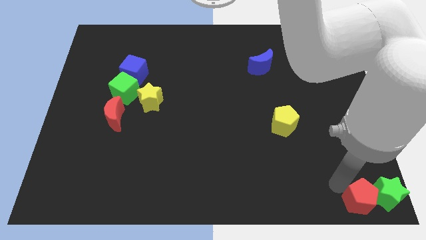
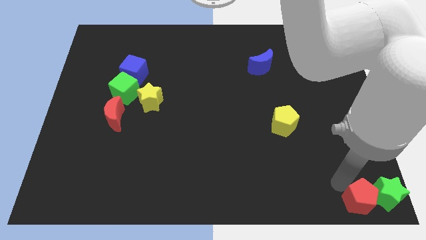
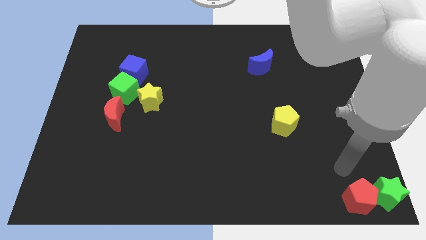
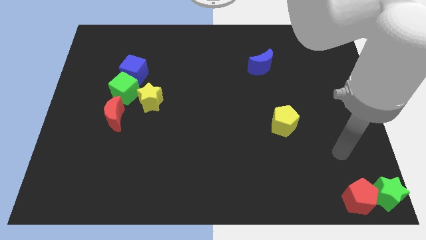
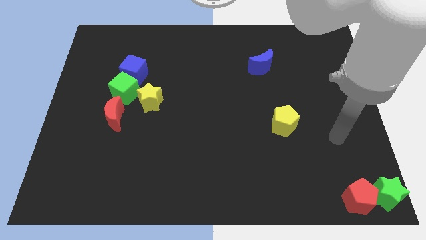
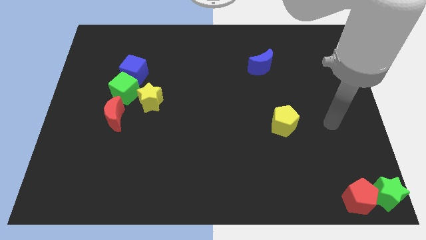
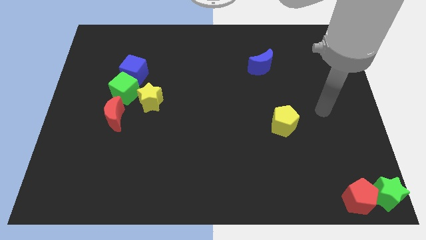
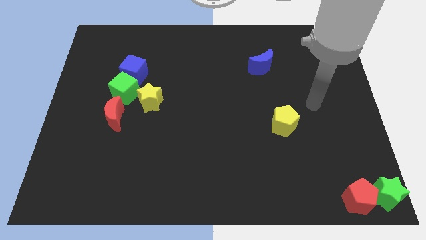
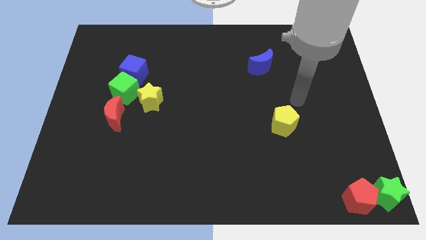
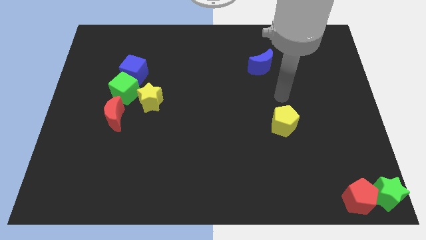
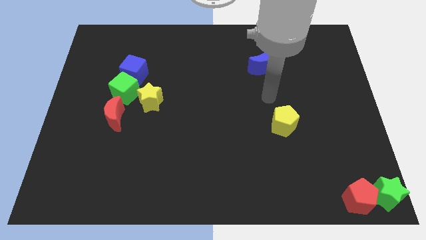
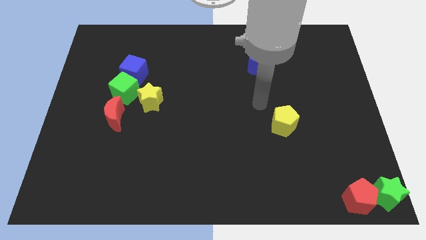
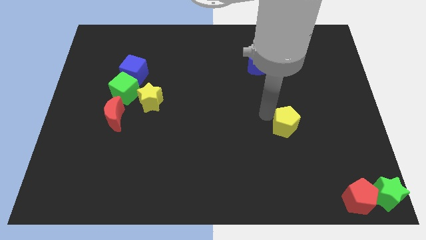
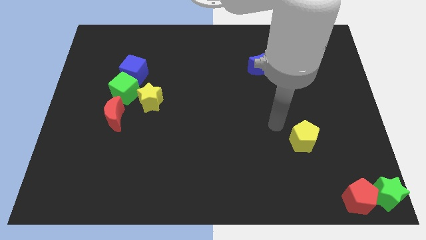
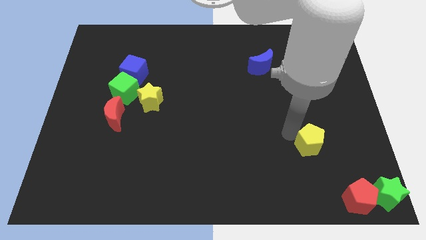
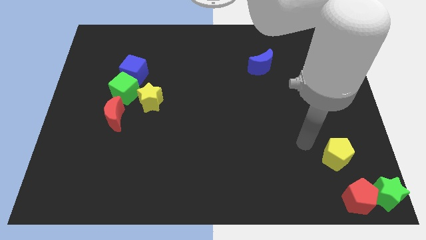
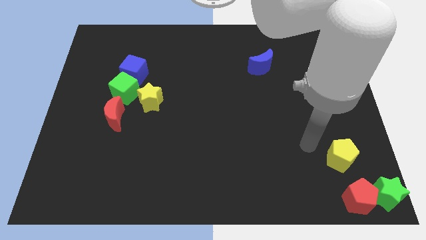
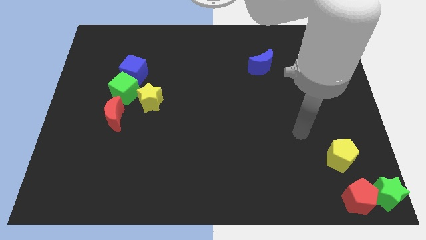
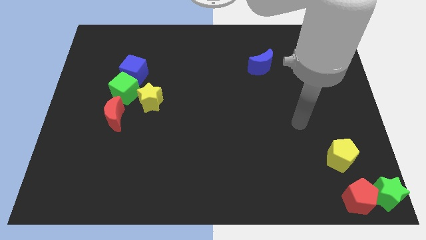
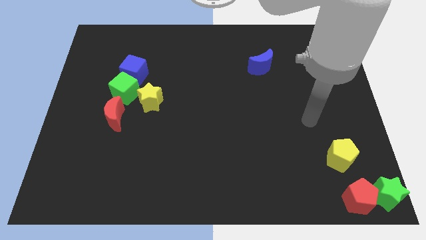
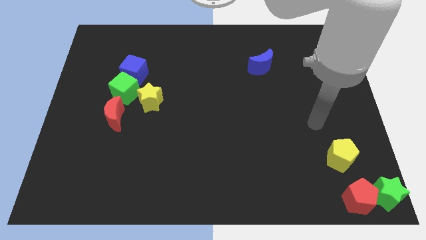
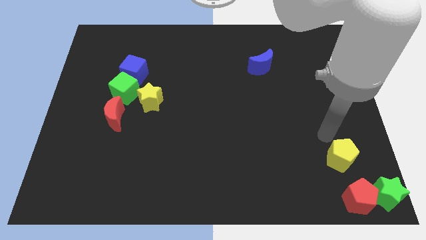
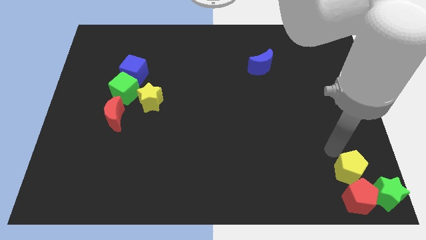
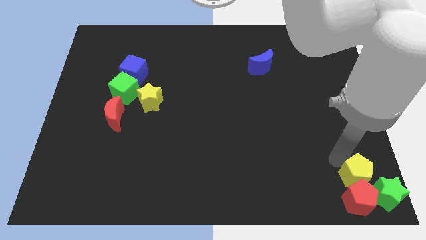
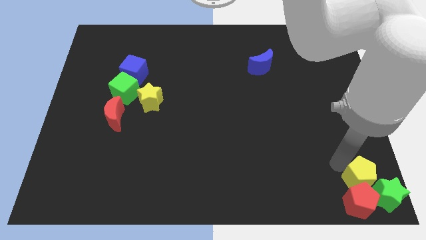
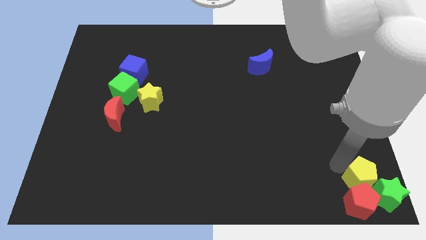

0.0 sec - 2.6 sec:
place the yellow pentagon at the top of red pentagon

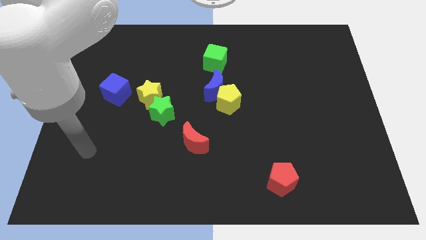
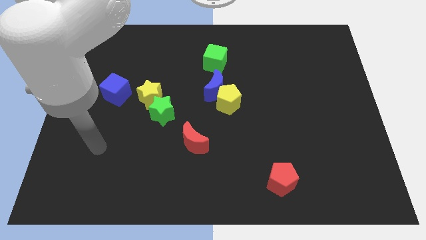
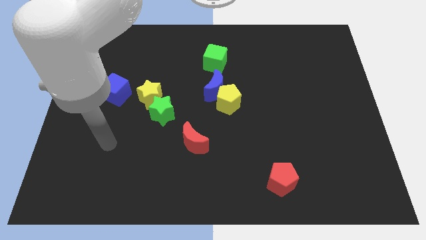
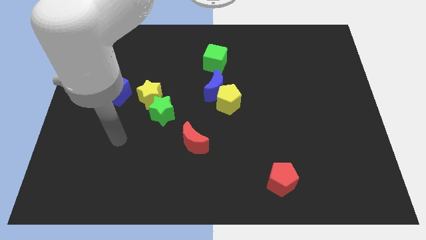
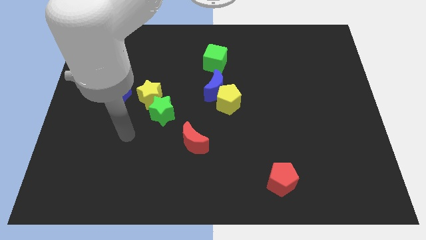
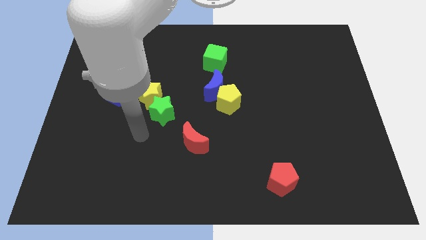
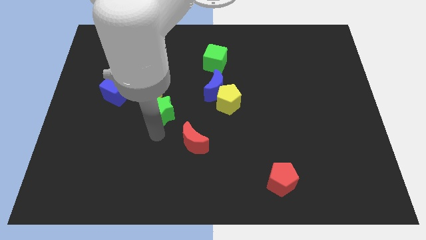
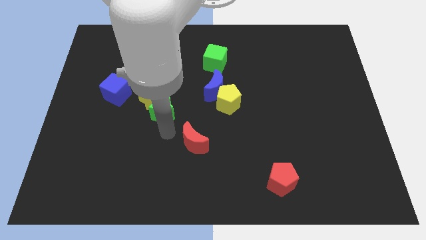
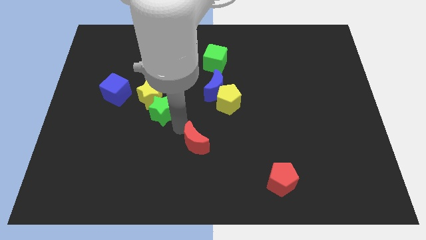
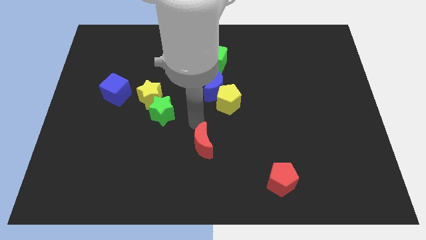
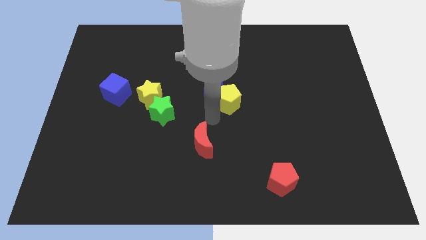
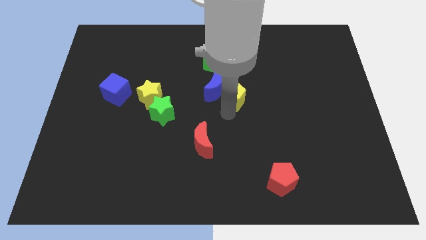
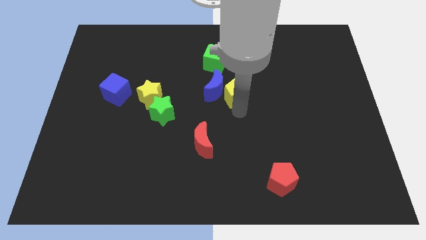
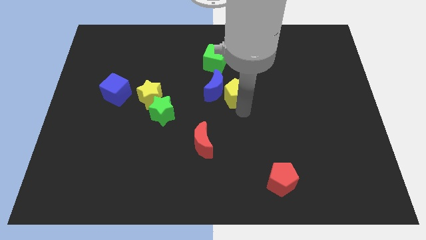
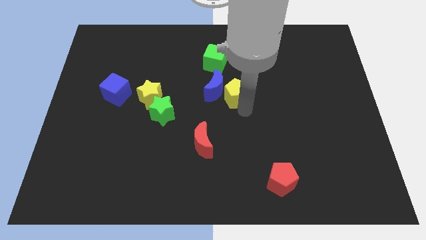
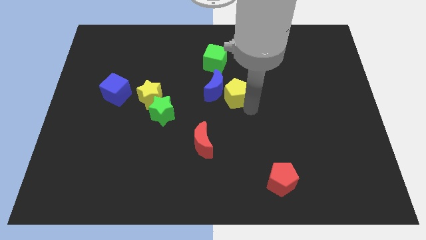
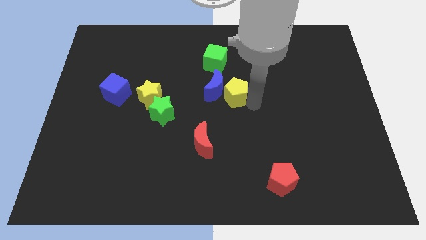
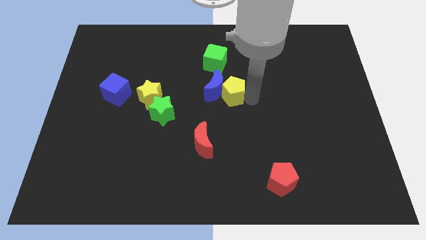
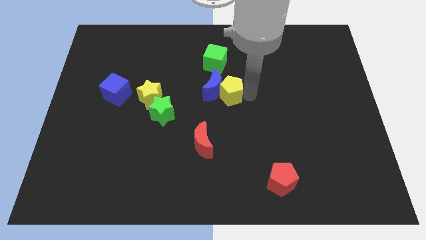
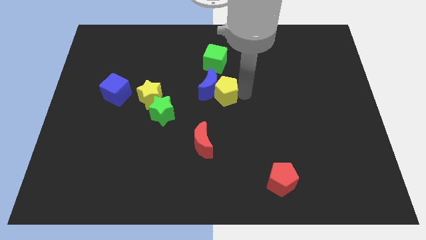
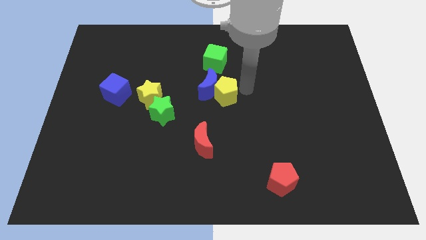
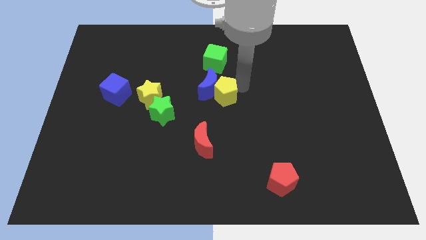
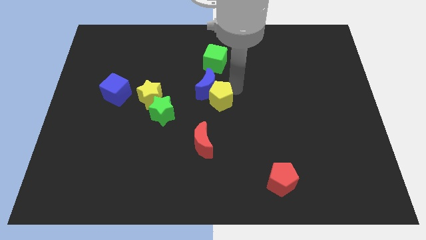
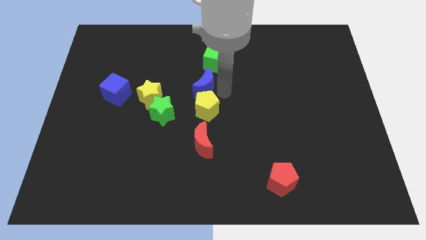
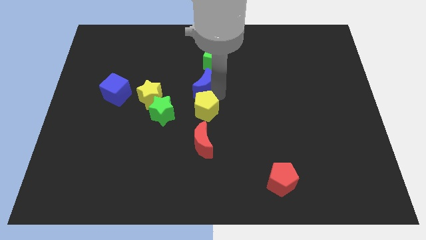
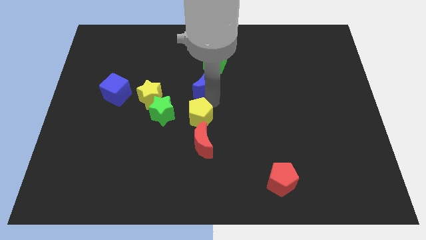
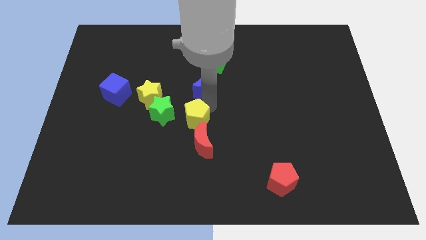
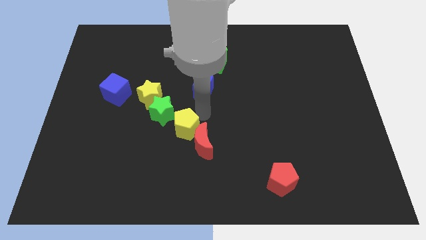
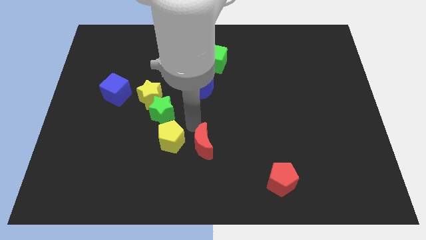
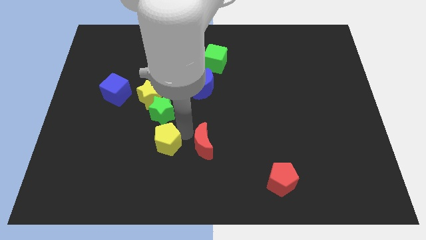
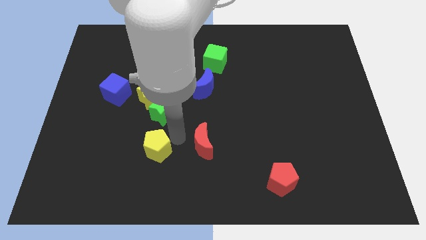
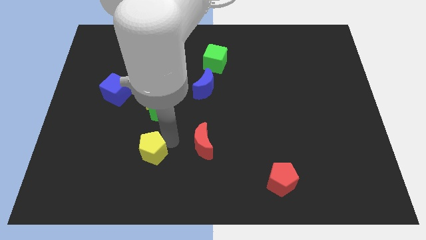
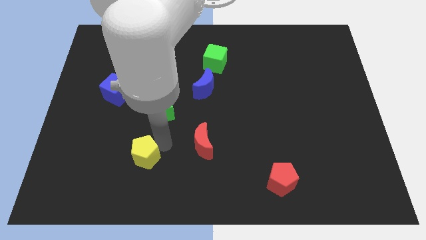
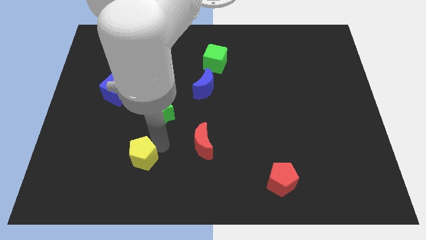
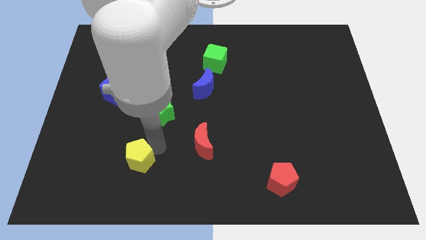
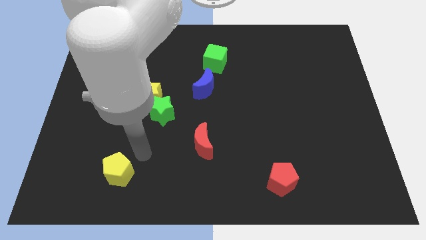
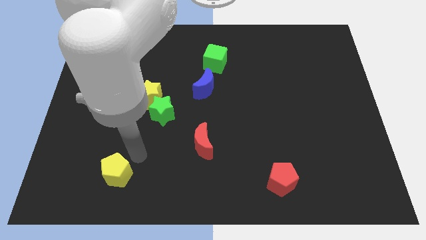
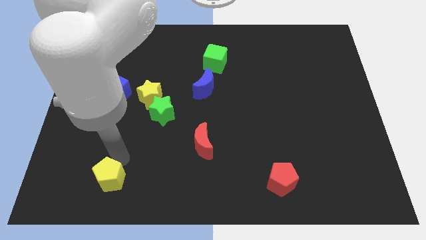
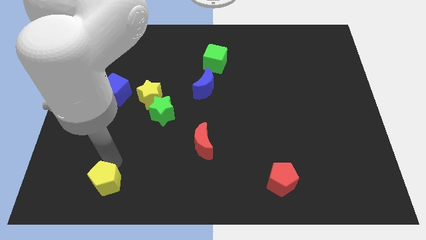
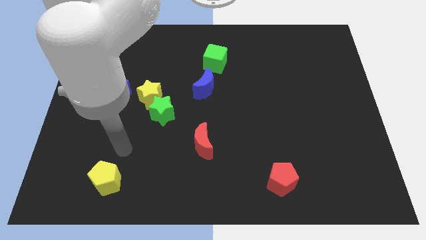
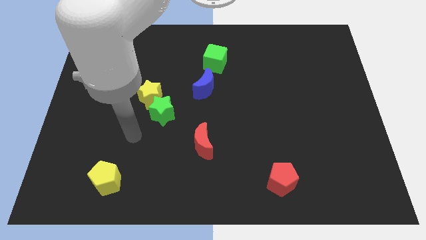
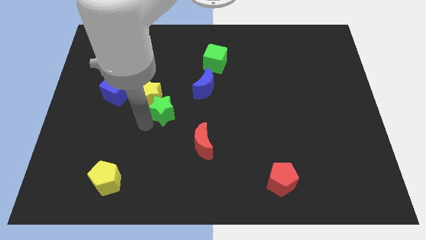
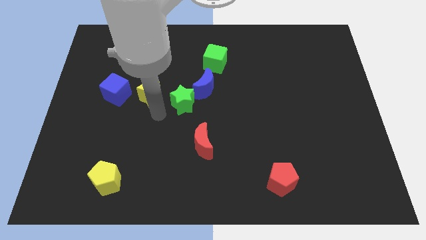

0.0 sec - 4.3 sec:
push the yellow pentagon horizontal left to the red pentagon

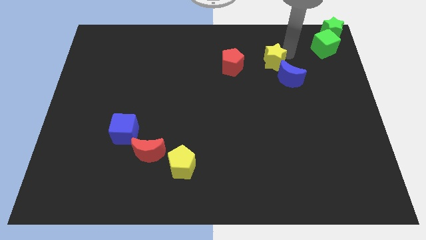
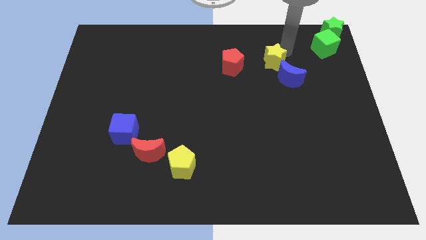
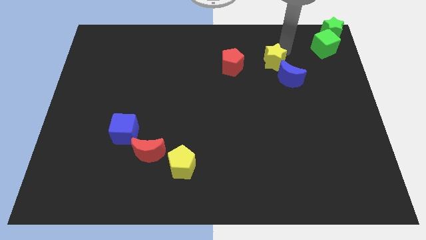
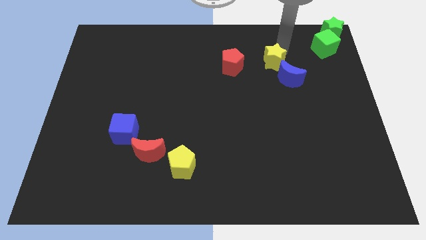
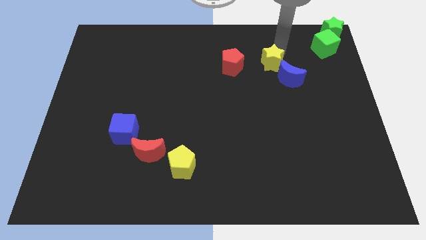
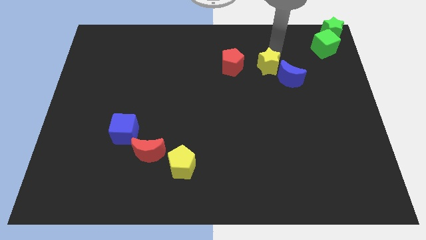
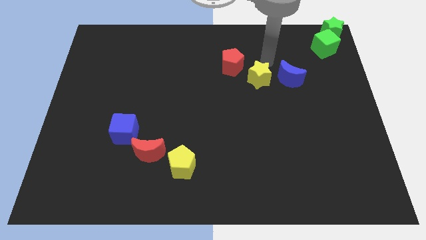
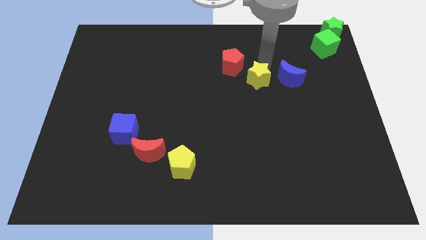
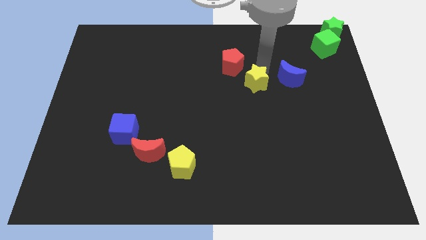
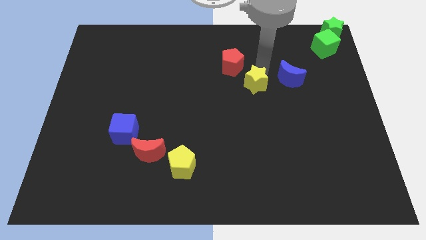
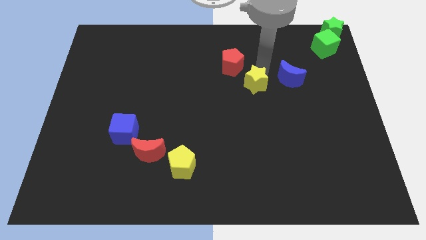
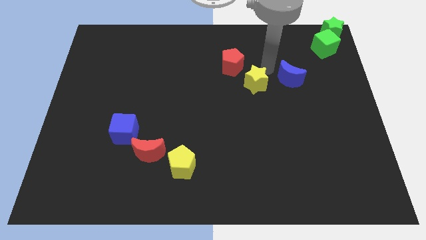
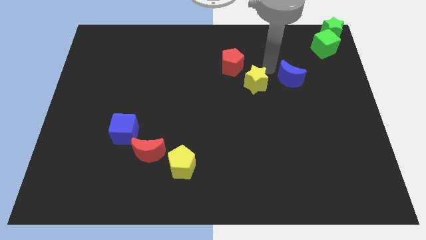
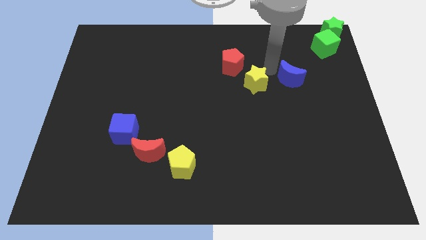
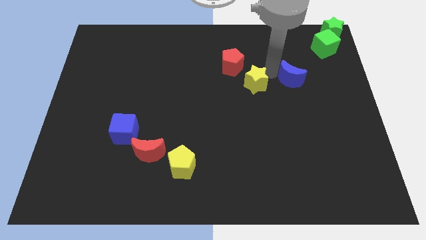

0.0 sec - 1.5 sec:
slightly push the yellow star towards the bottom side

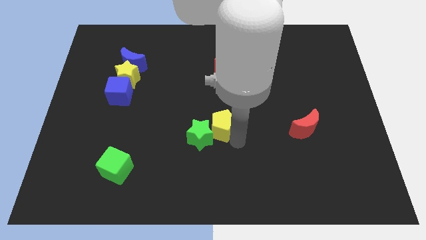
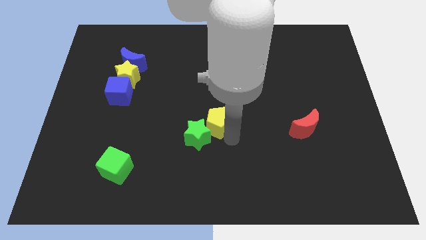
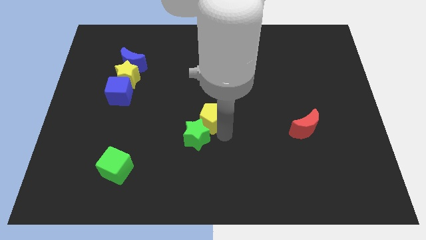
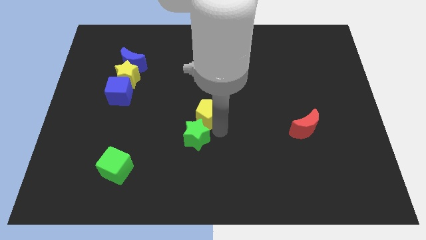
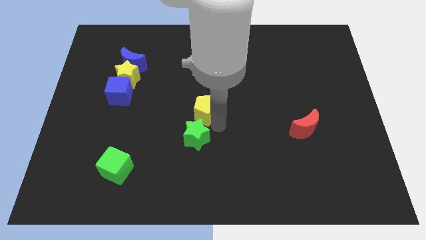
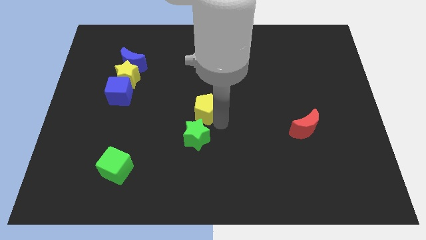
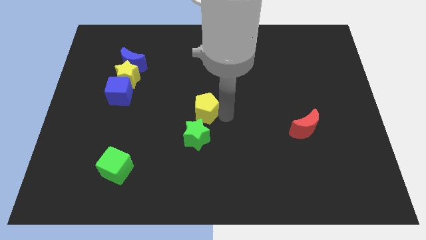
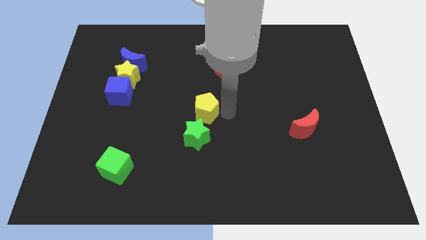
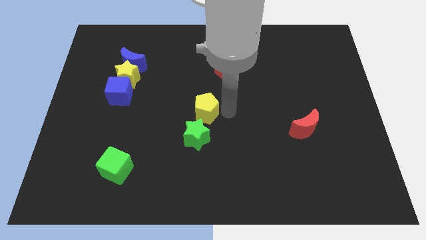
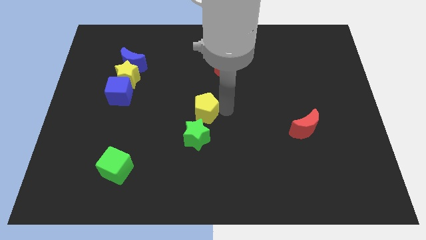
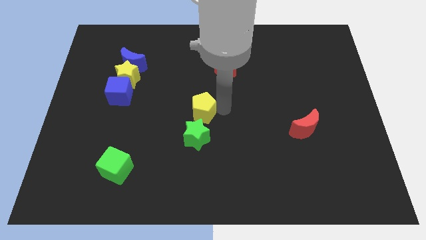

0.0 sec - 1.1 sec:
move the yellow pentagon above the green star
